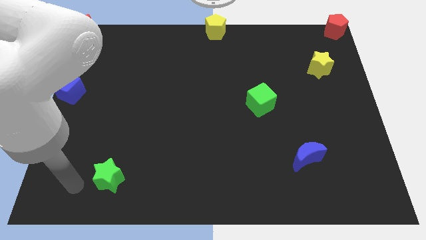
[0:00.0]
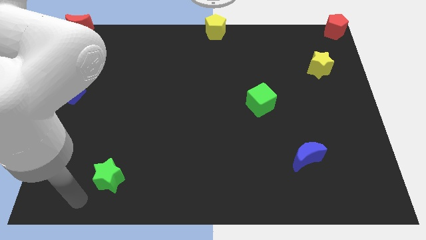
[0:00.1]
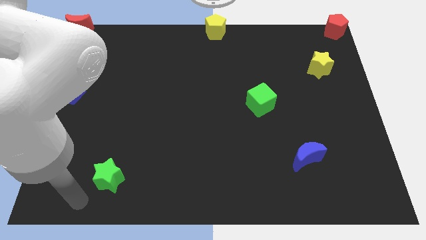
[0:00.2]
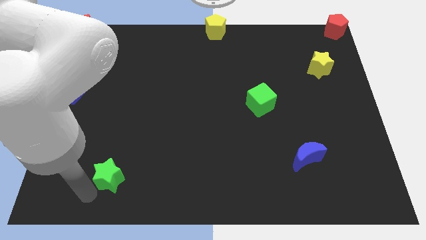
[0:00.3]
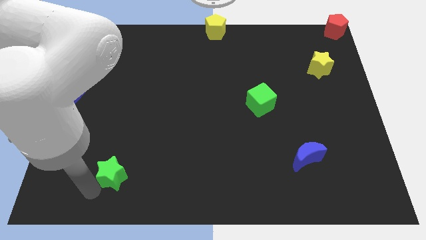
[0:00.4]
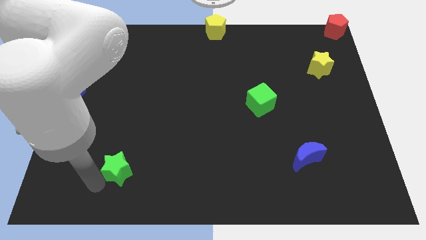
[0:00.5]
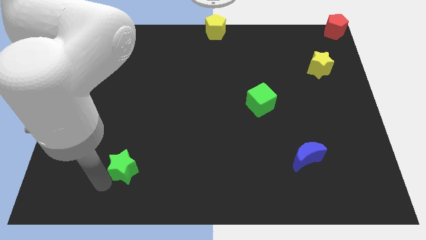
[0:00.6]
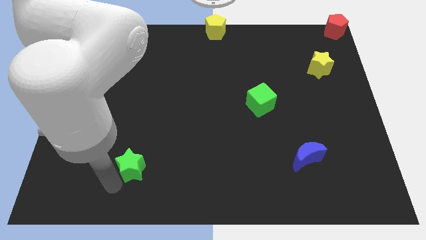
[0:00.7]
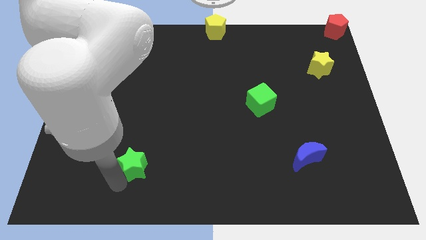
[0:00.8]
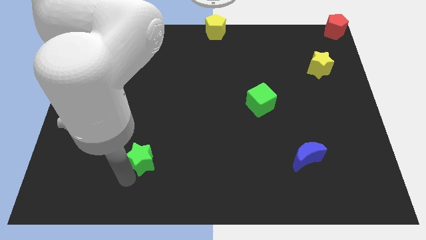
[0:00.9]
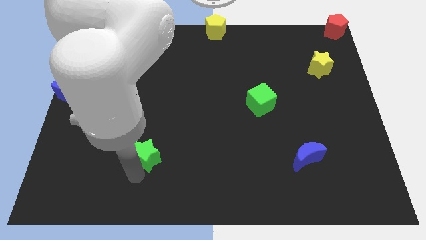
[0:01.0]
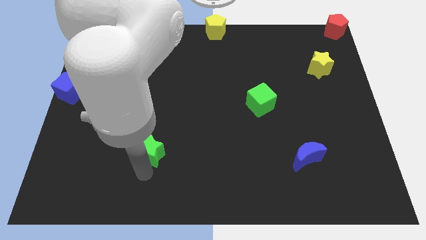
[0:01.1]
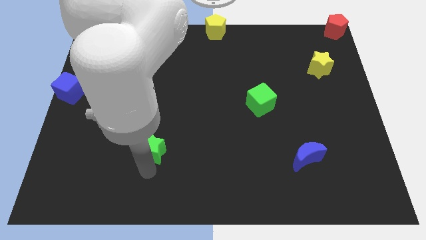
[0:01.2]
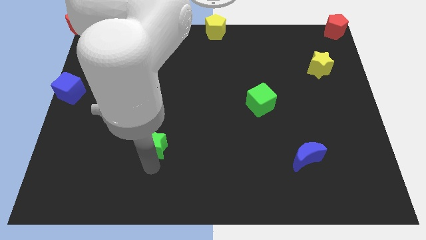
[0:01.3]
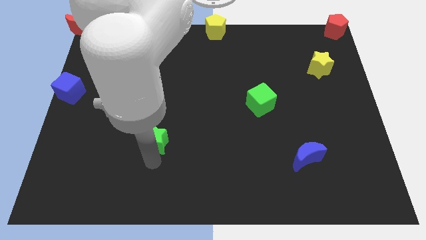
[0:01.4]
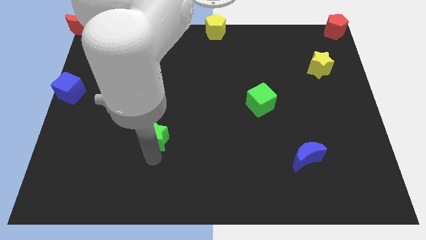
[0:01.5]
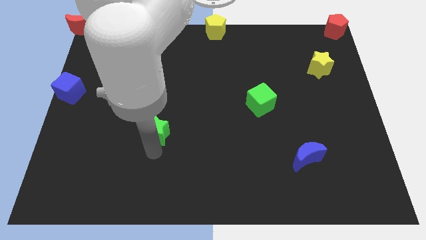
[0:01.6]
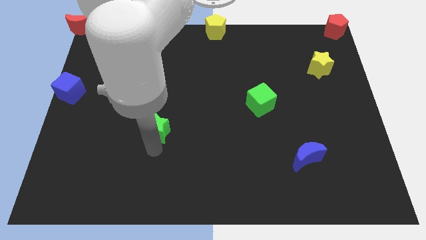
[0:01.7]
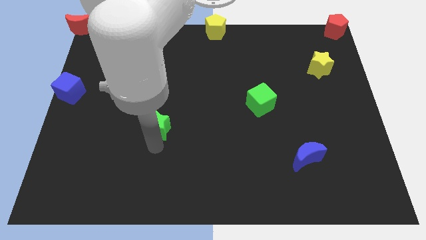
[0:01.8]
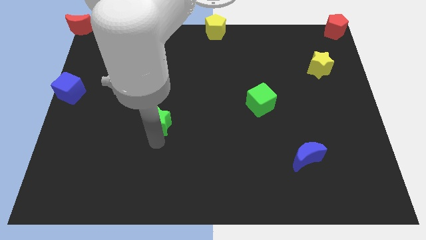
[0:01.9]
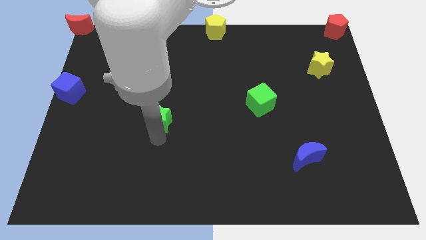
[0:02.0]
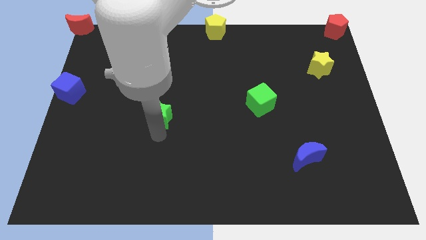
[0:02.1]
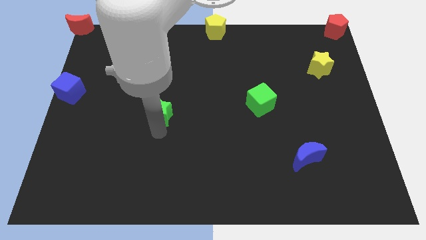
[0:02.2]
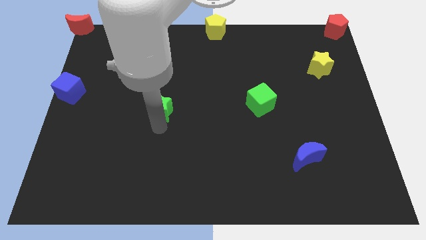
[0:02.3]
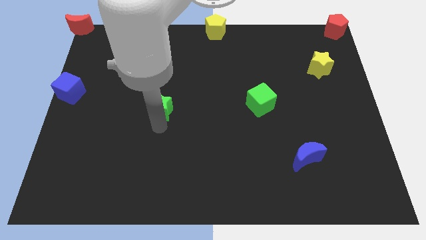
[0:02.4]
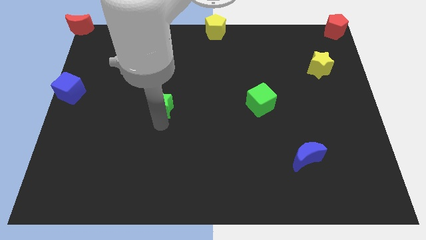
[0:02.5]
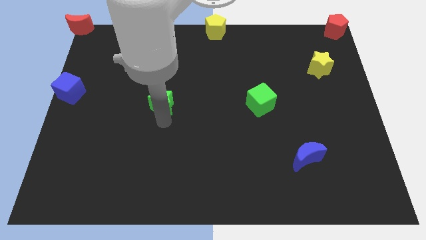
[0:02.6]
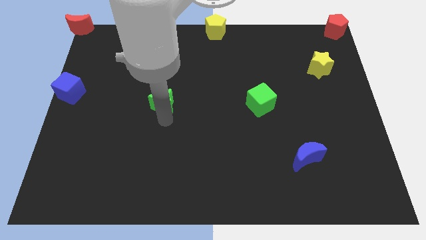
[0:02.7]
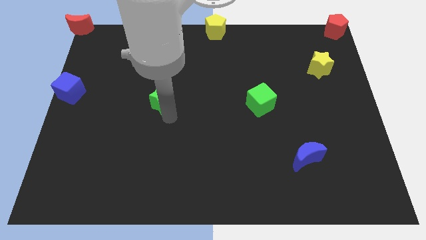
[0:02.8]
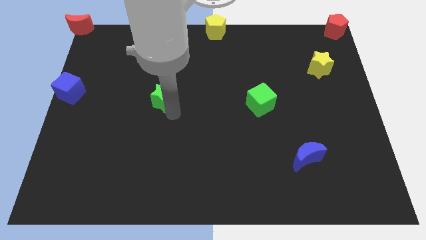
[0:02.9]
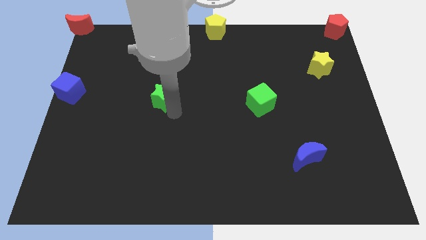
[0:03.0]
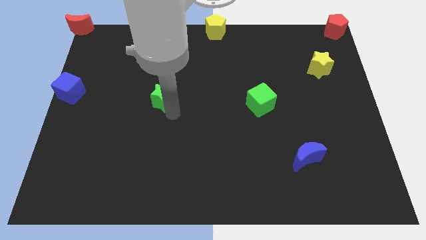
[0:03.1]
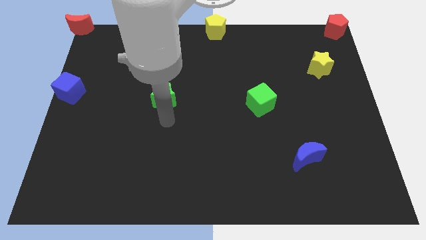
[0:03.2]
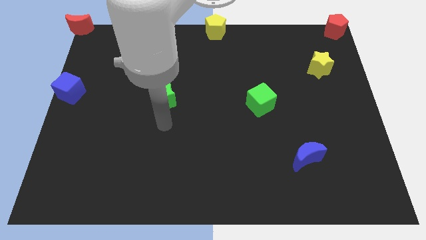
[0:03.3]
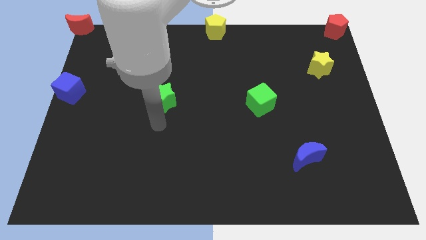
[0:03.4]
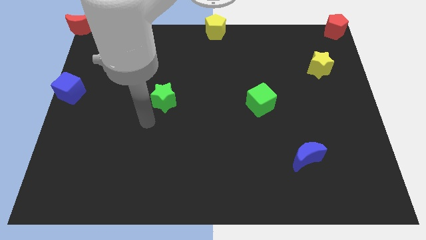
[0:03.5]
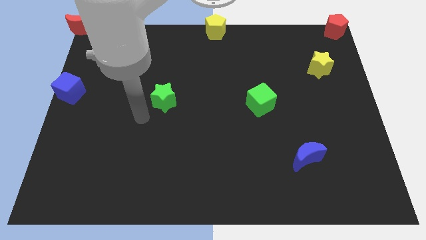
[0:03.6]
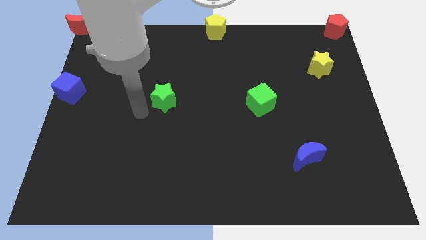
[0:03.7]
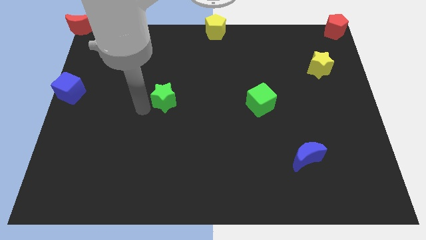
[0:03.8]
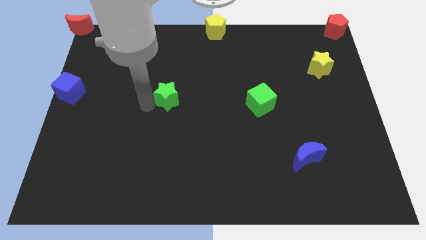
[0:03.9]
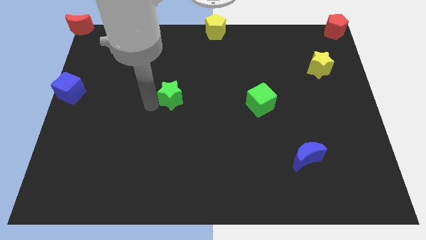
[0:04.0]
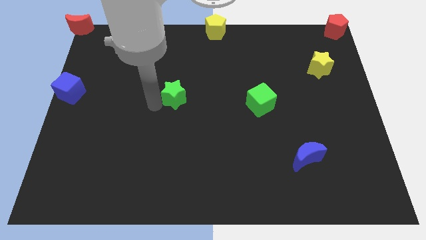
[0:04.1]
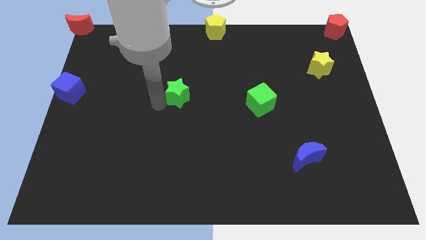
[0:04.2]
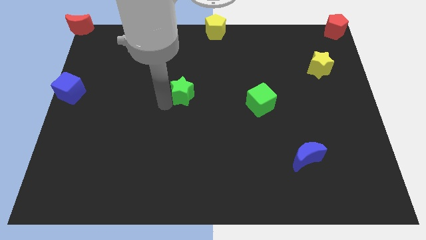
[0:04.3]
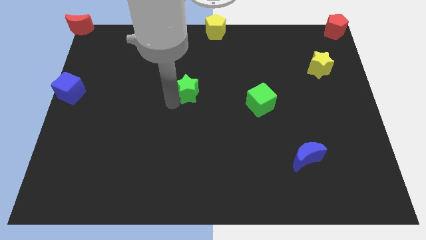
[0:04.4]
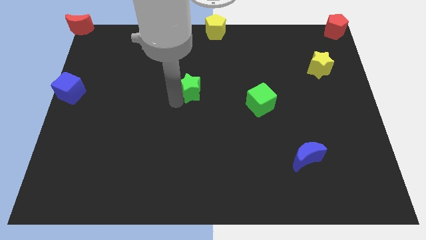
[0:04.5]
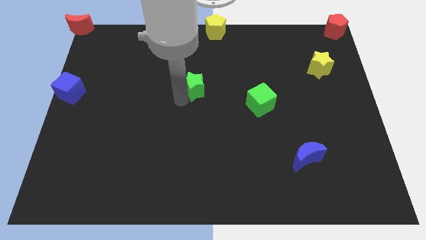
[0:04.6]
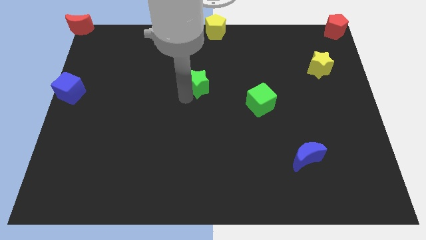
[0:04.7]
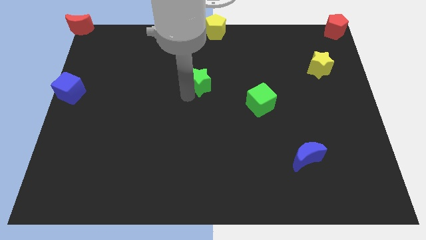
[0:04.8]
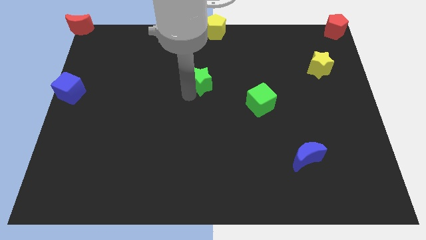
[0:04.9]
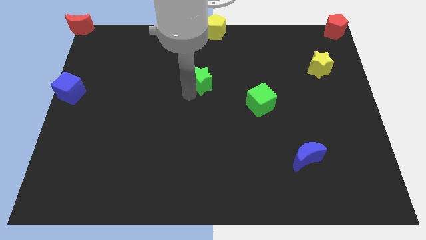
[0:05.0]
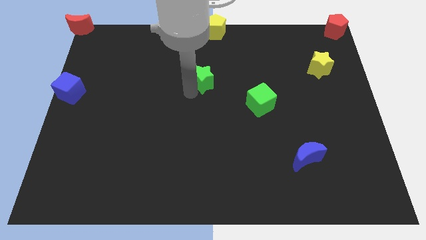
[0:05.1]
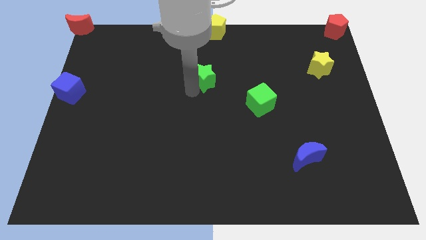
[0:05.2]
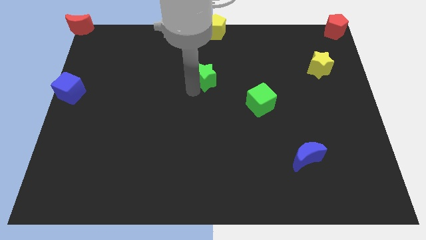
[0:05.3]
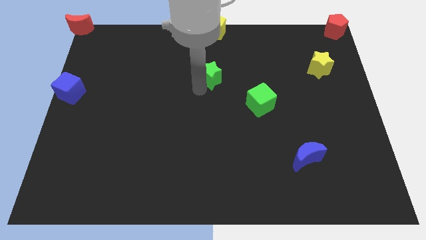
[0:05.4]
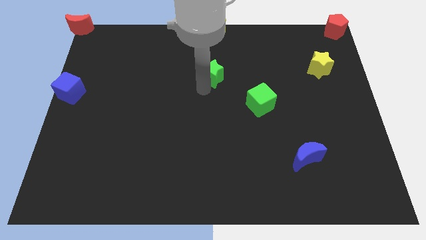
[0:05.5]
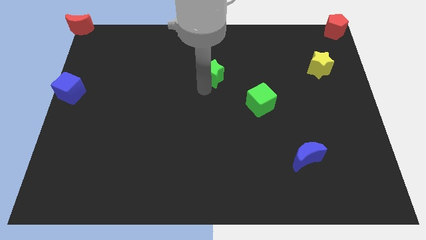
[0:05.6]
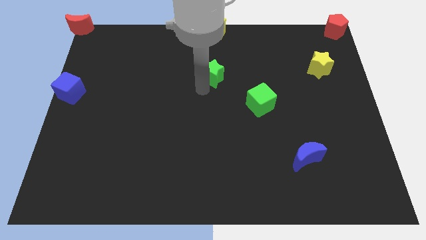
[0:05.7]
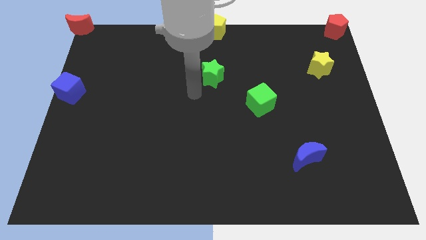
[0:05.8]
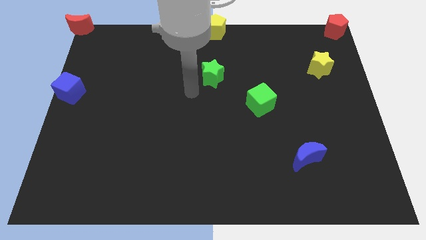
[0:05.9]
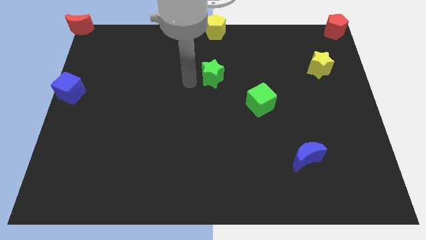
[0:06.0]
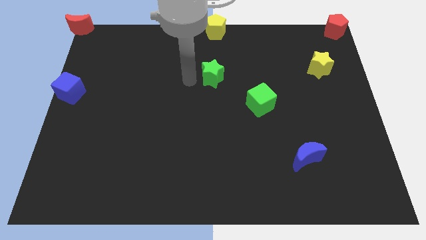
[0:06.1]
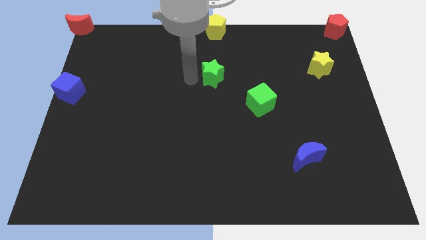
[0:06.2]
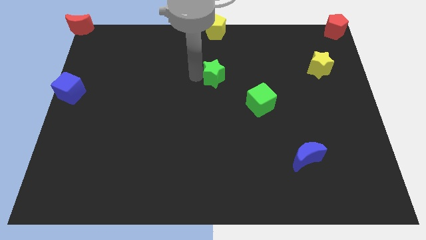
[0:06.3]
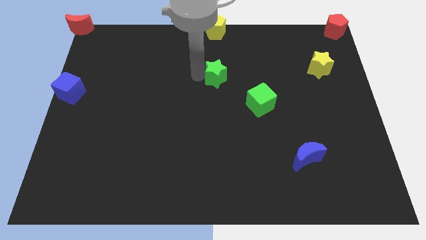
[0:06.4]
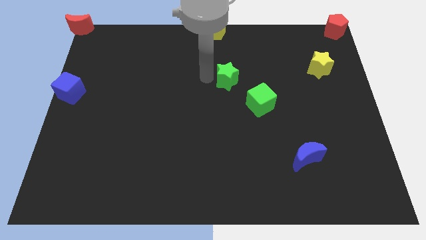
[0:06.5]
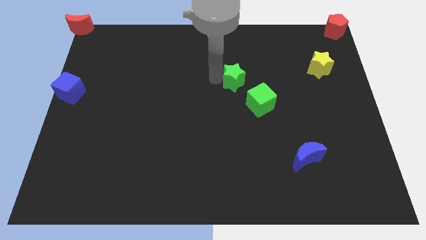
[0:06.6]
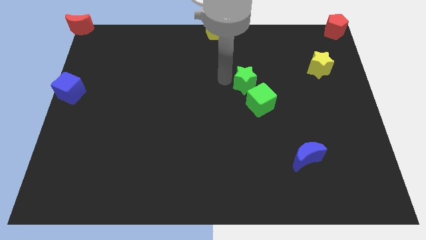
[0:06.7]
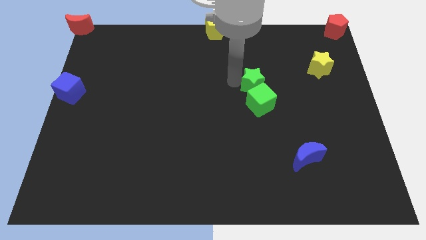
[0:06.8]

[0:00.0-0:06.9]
move green star towards the green cube

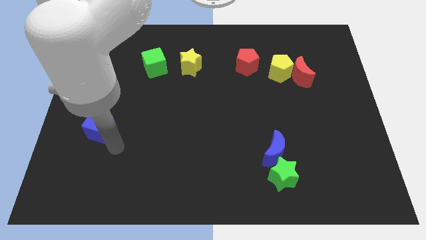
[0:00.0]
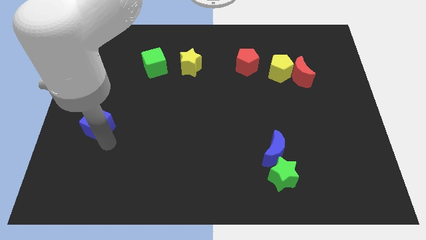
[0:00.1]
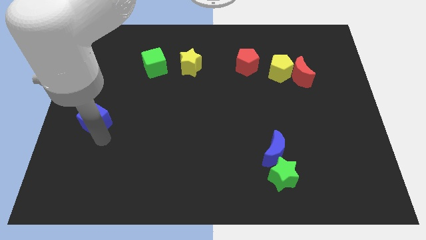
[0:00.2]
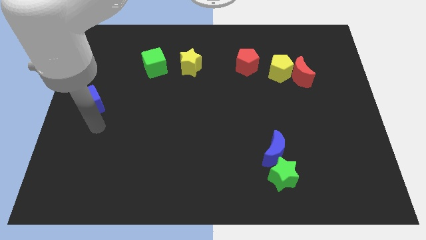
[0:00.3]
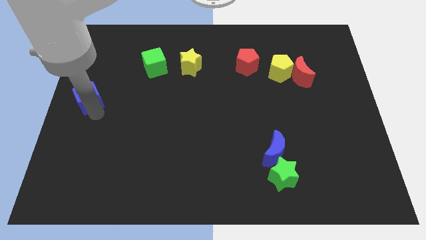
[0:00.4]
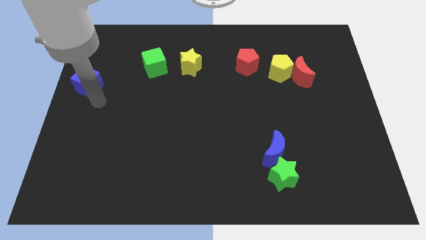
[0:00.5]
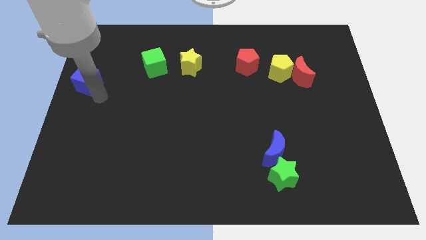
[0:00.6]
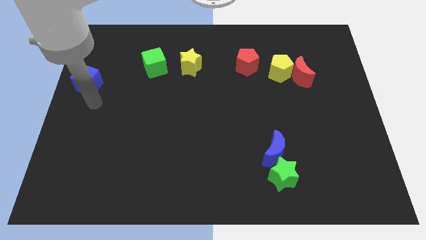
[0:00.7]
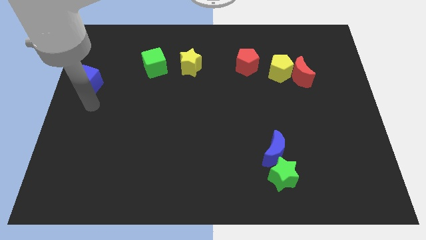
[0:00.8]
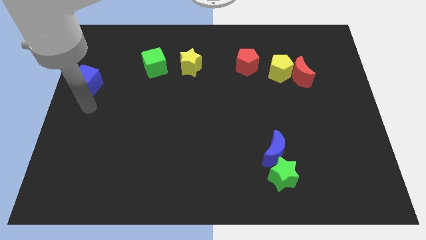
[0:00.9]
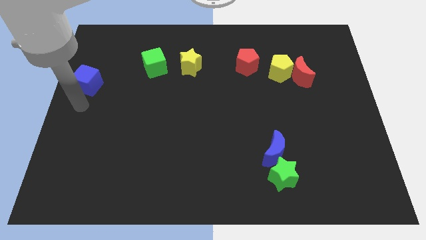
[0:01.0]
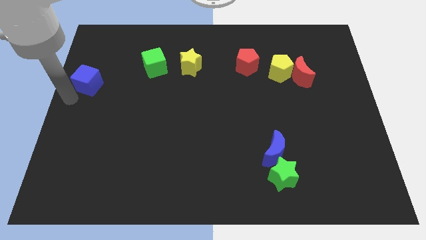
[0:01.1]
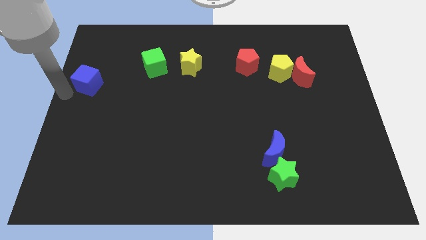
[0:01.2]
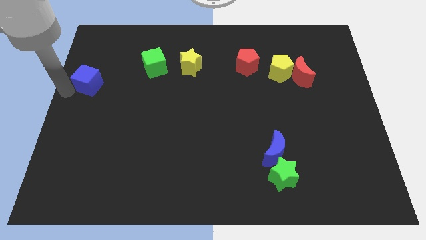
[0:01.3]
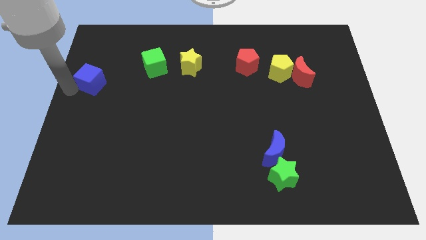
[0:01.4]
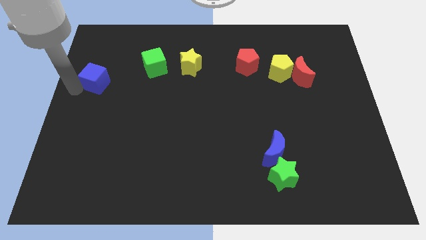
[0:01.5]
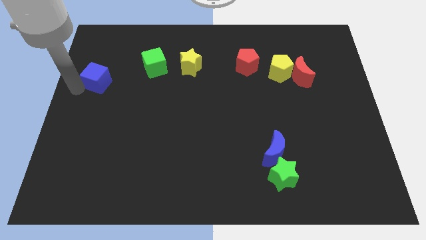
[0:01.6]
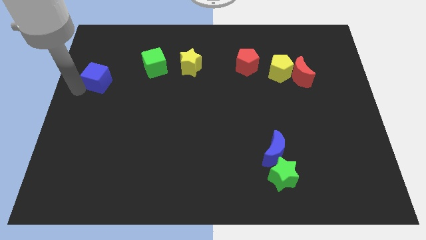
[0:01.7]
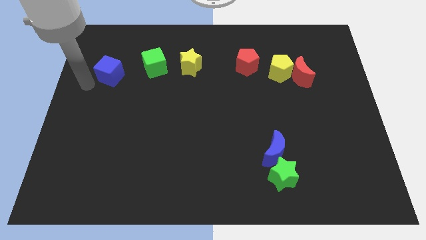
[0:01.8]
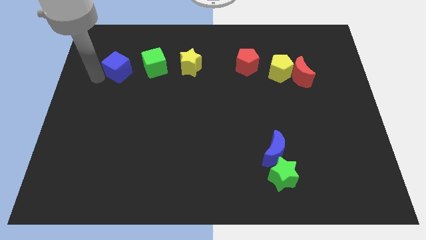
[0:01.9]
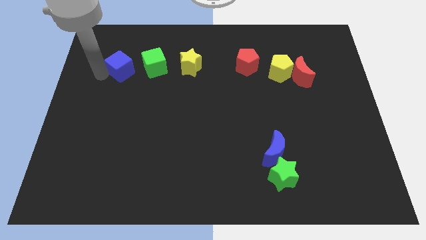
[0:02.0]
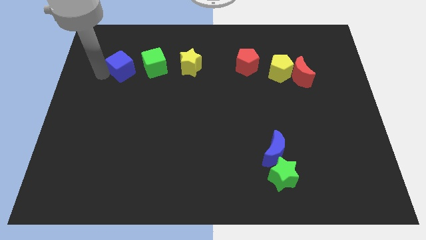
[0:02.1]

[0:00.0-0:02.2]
place the blue cube towards the left side of the green cube
